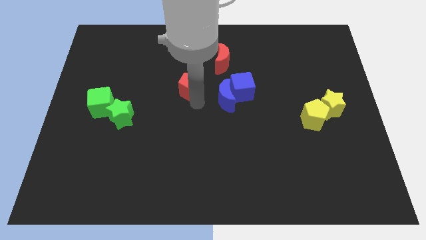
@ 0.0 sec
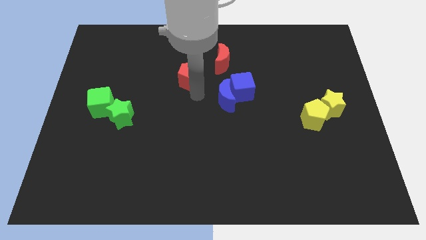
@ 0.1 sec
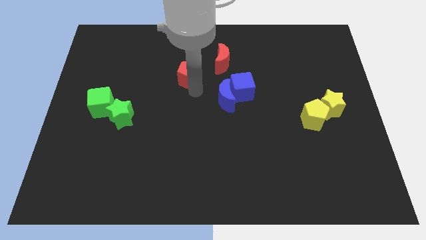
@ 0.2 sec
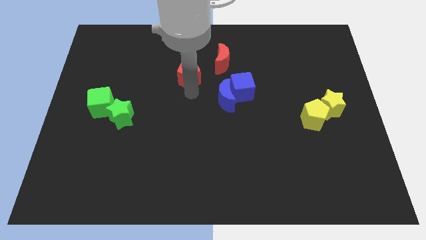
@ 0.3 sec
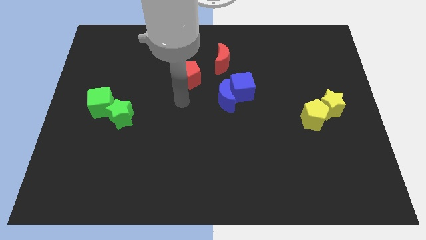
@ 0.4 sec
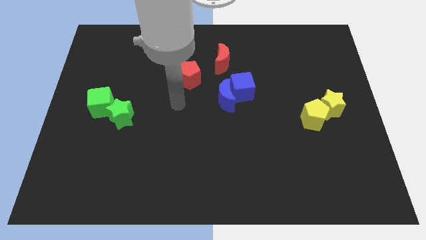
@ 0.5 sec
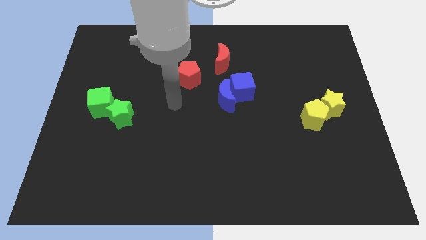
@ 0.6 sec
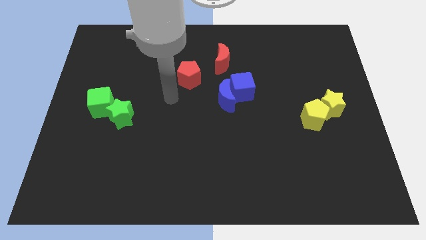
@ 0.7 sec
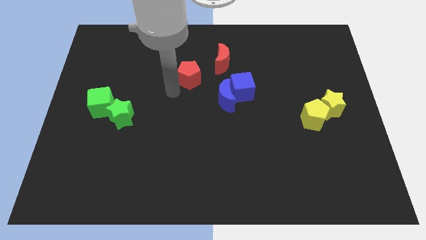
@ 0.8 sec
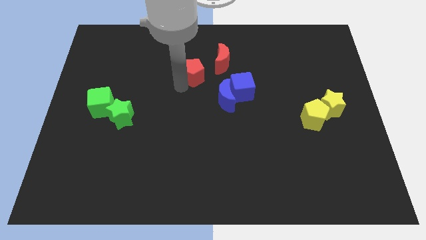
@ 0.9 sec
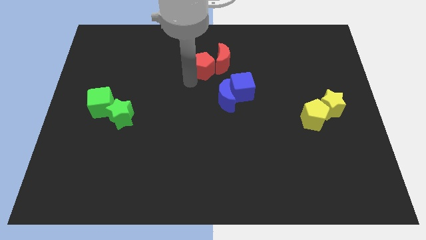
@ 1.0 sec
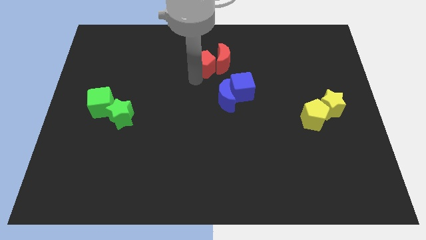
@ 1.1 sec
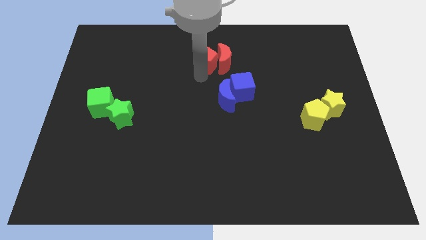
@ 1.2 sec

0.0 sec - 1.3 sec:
push red pentagon into red moon

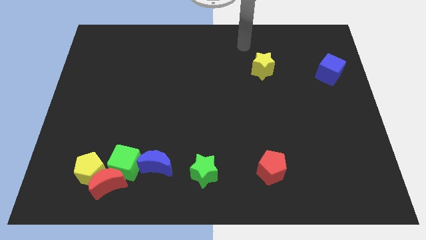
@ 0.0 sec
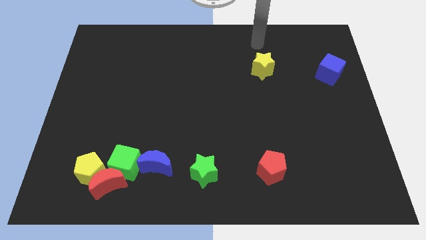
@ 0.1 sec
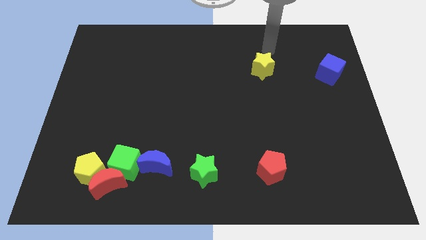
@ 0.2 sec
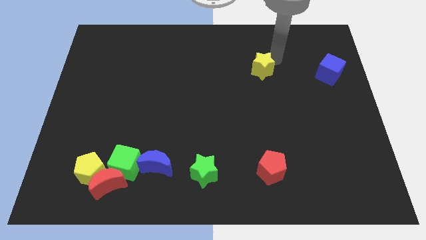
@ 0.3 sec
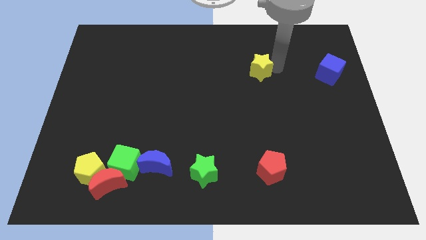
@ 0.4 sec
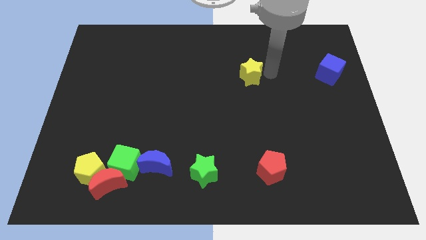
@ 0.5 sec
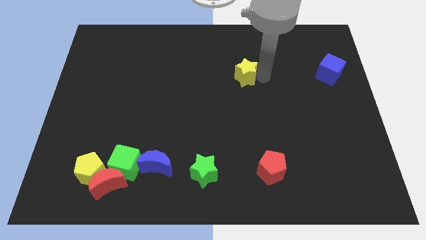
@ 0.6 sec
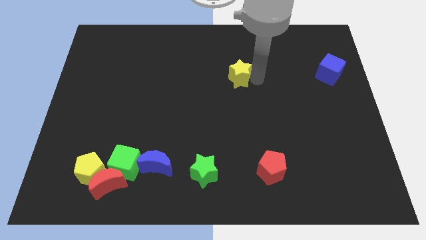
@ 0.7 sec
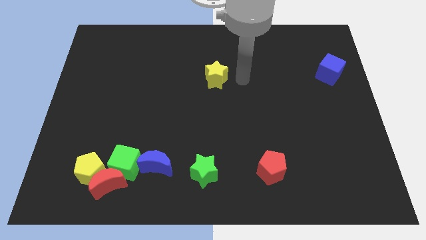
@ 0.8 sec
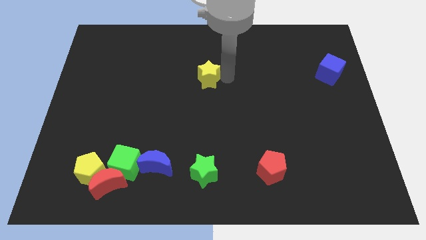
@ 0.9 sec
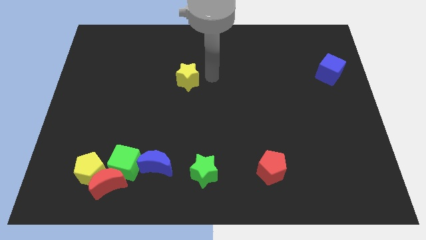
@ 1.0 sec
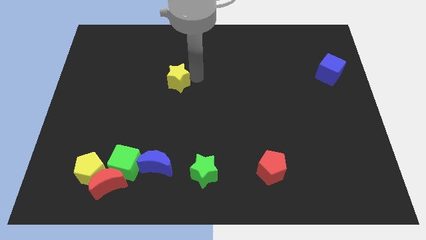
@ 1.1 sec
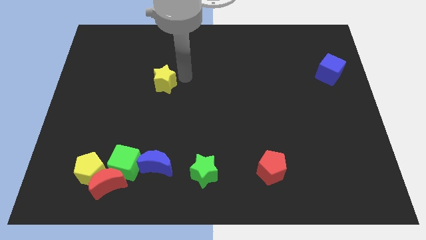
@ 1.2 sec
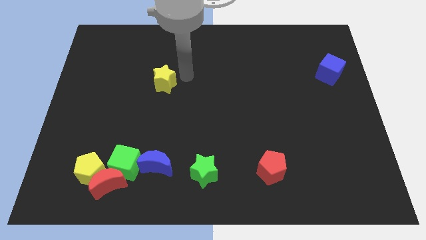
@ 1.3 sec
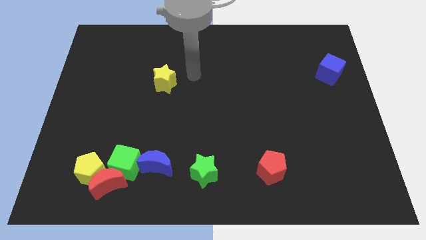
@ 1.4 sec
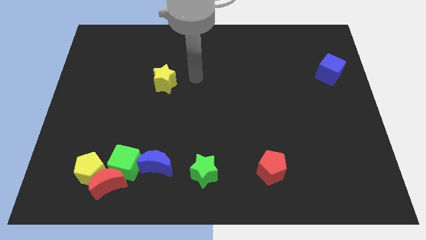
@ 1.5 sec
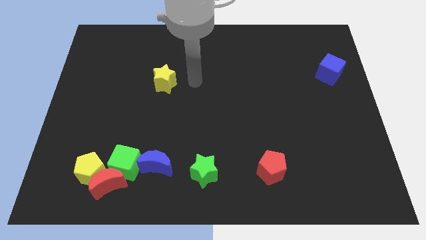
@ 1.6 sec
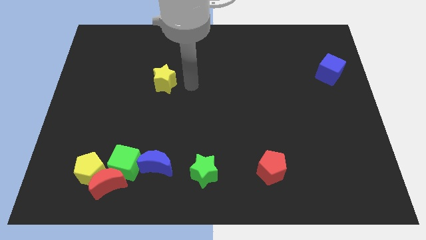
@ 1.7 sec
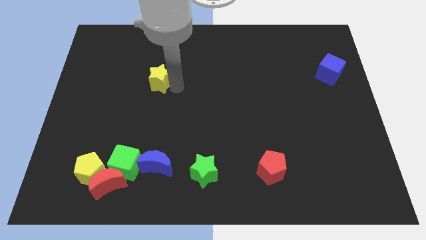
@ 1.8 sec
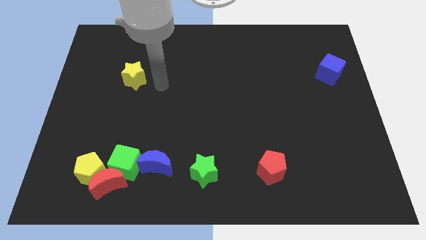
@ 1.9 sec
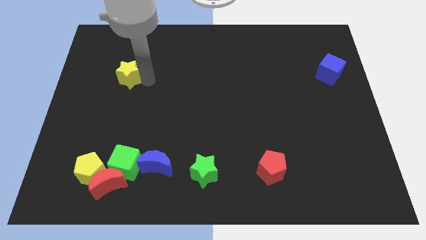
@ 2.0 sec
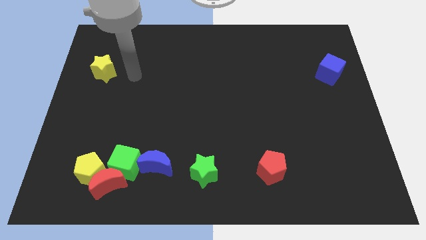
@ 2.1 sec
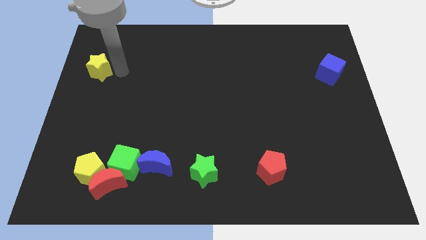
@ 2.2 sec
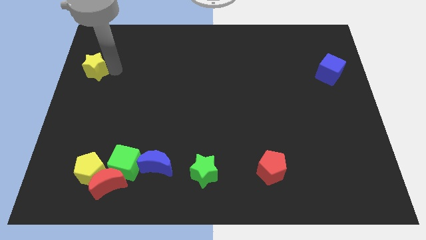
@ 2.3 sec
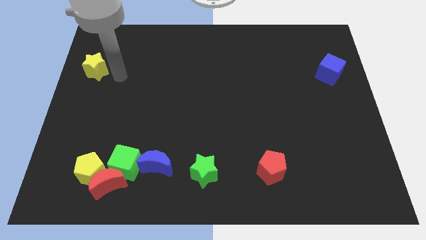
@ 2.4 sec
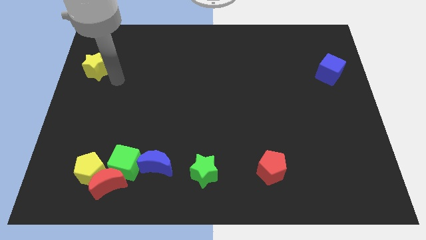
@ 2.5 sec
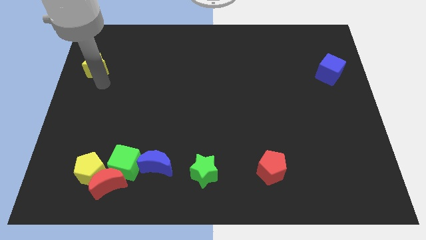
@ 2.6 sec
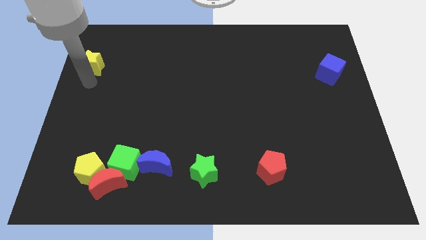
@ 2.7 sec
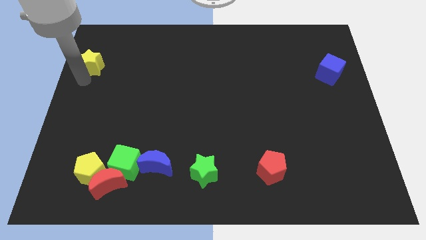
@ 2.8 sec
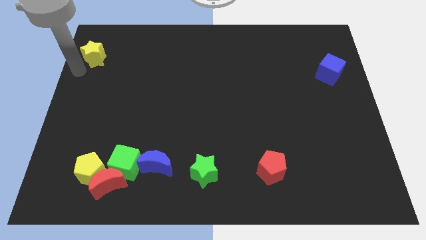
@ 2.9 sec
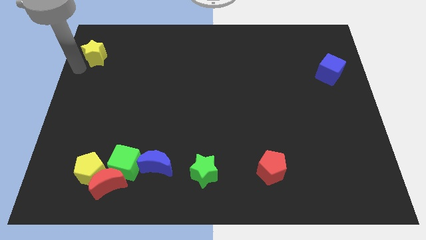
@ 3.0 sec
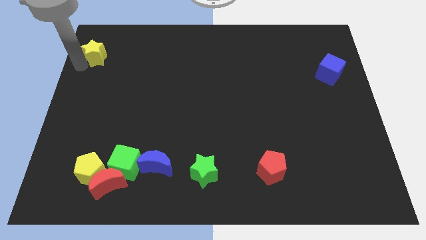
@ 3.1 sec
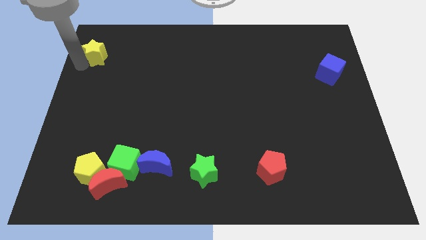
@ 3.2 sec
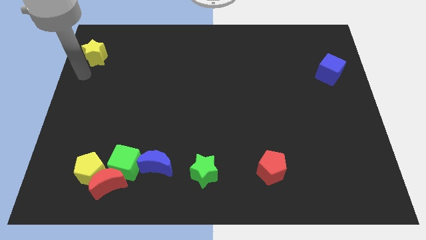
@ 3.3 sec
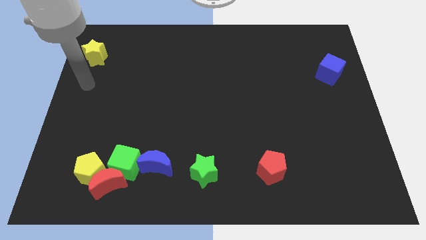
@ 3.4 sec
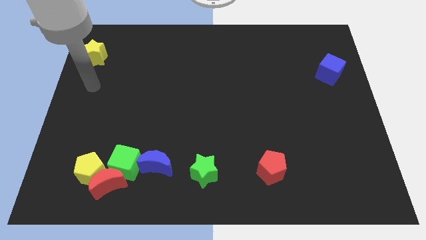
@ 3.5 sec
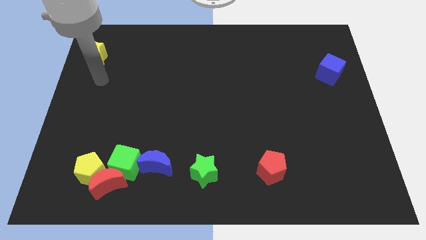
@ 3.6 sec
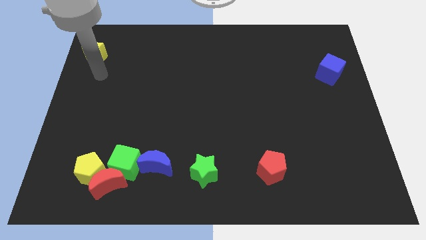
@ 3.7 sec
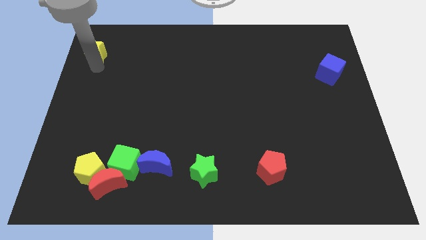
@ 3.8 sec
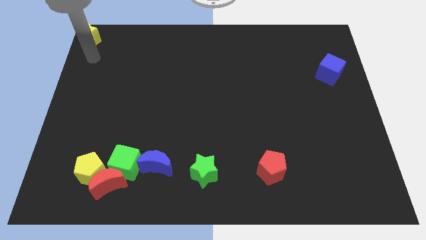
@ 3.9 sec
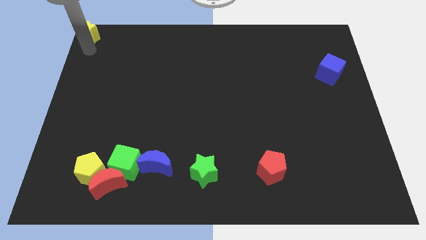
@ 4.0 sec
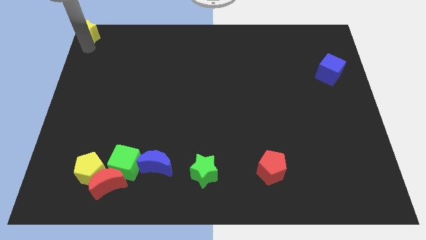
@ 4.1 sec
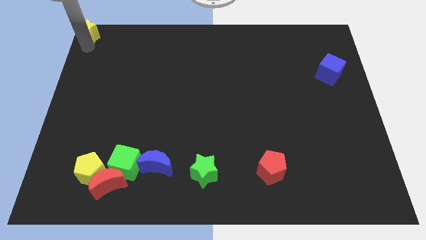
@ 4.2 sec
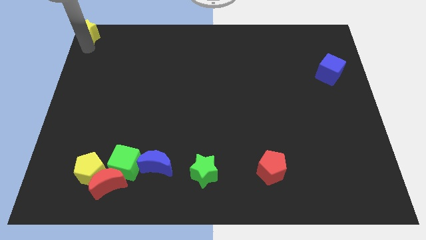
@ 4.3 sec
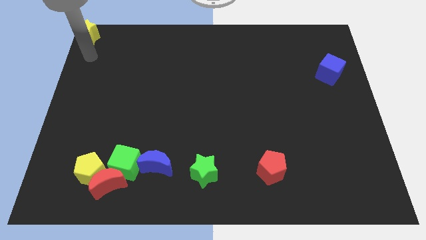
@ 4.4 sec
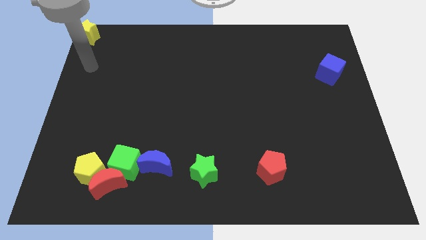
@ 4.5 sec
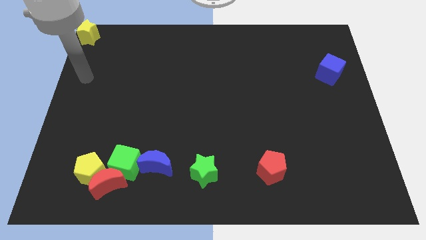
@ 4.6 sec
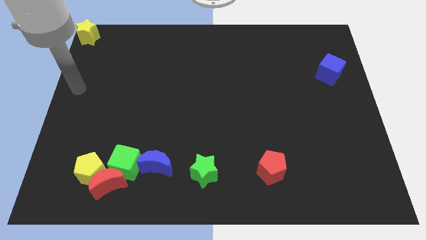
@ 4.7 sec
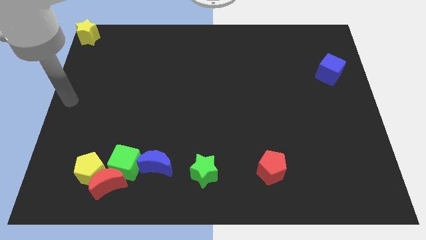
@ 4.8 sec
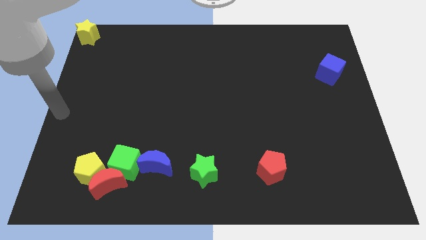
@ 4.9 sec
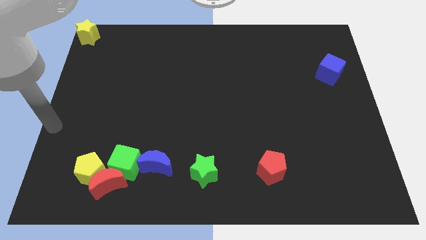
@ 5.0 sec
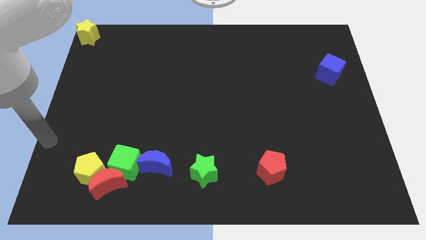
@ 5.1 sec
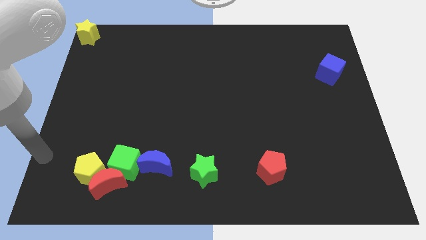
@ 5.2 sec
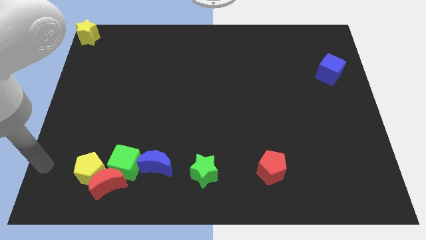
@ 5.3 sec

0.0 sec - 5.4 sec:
place the yellow star at the top left corner of the board

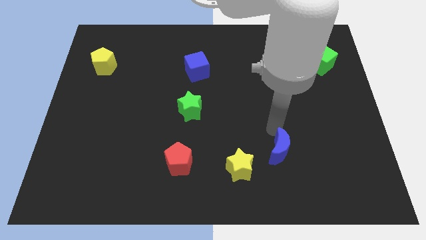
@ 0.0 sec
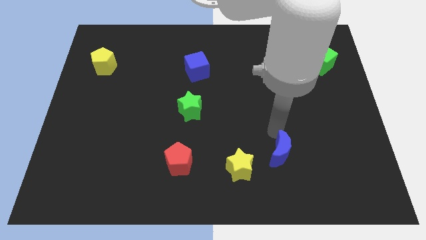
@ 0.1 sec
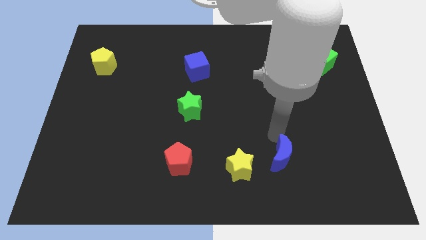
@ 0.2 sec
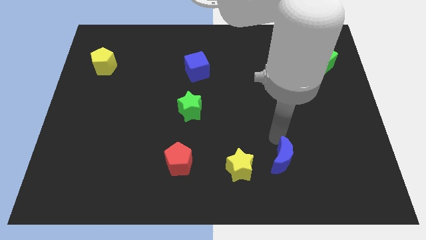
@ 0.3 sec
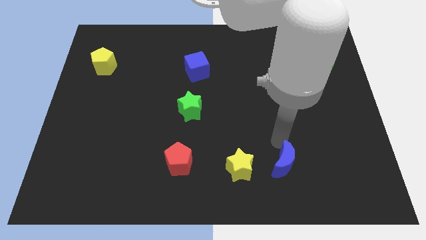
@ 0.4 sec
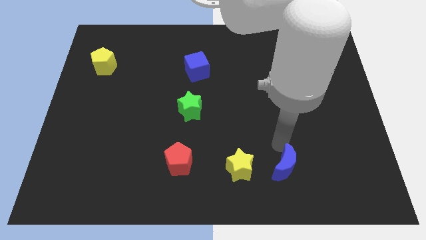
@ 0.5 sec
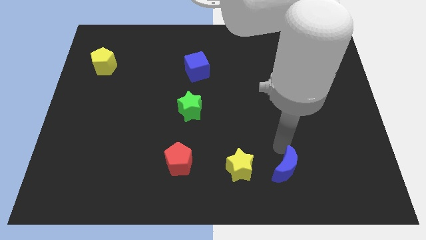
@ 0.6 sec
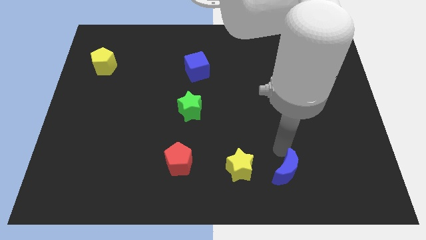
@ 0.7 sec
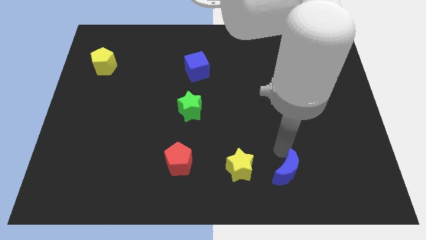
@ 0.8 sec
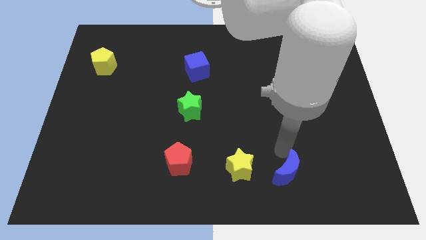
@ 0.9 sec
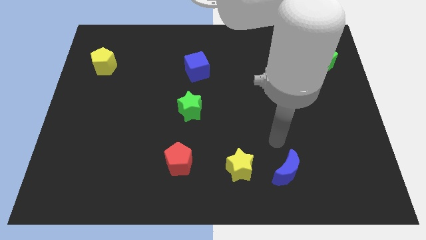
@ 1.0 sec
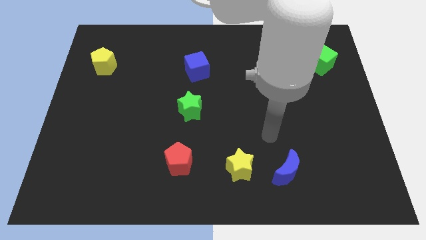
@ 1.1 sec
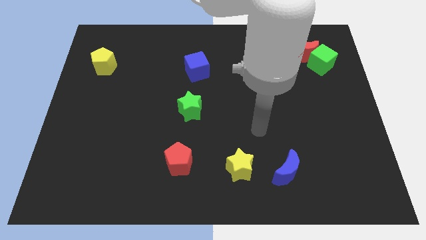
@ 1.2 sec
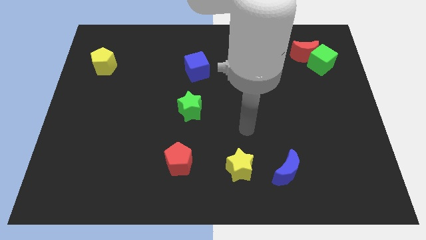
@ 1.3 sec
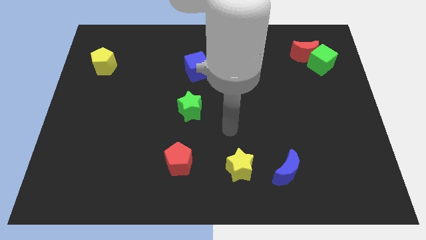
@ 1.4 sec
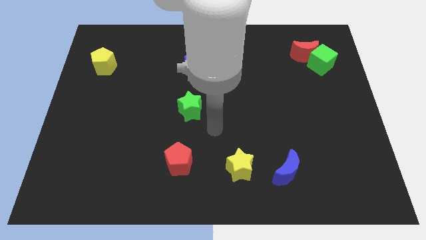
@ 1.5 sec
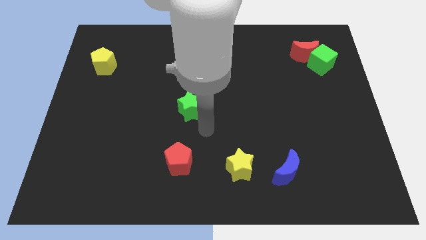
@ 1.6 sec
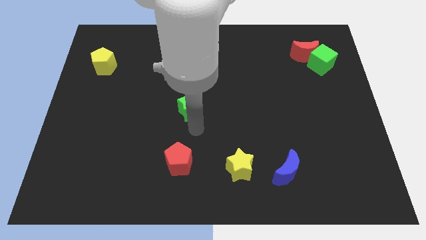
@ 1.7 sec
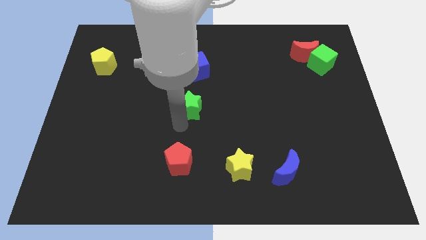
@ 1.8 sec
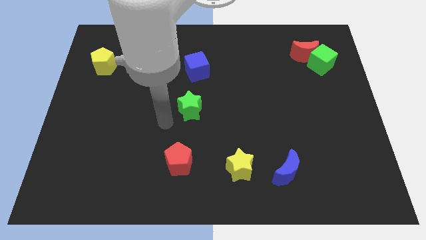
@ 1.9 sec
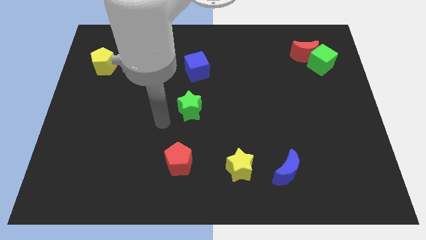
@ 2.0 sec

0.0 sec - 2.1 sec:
move the blue moon to the right of the yellow star
